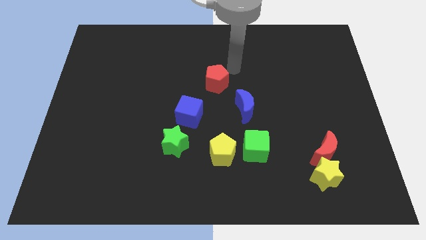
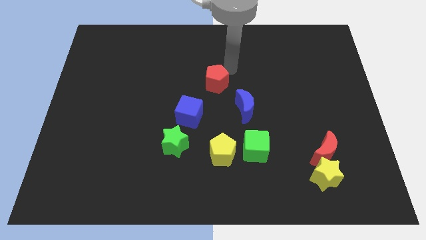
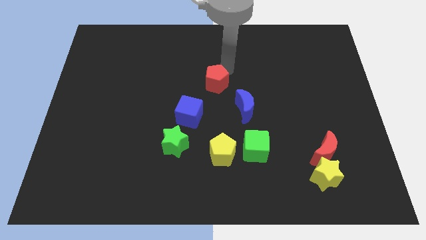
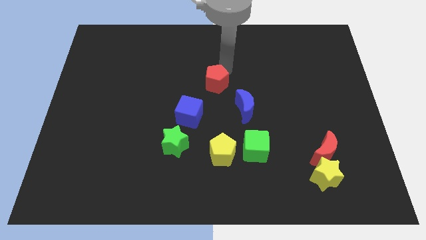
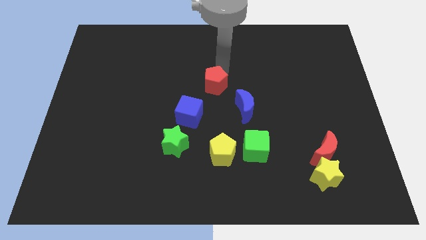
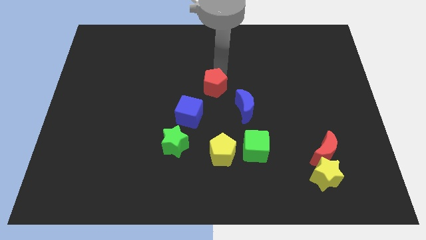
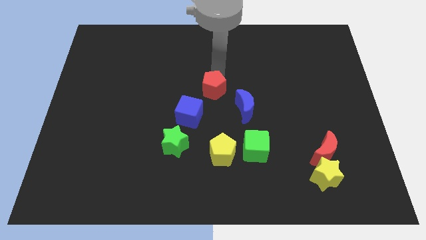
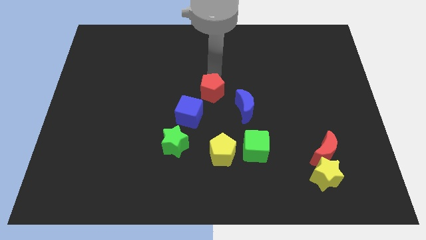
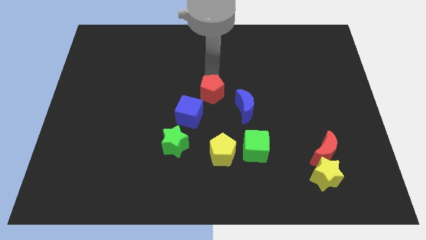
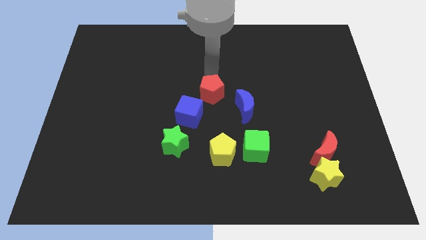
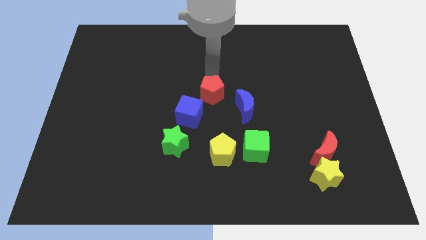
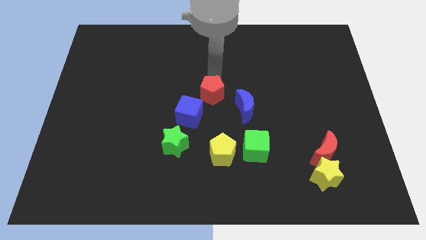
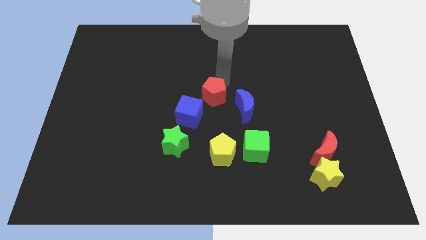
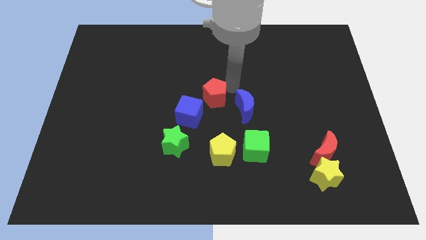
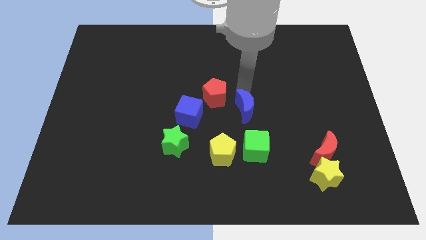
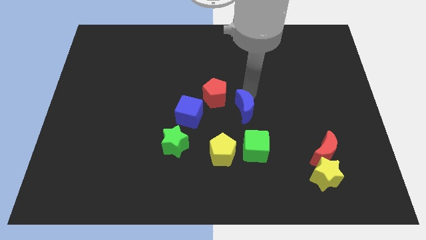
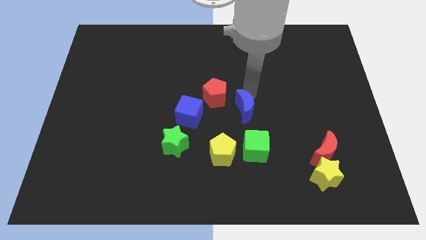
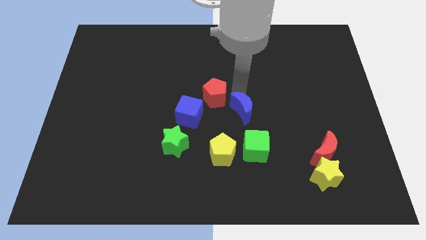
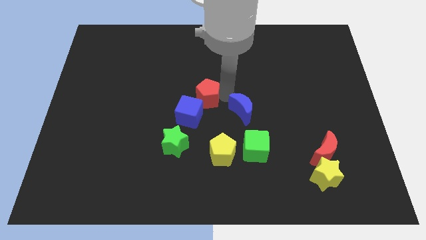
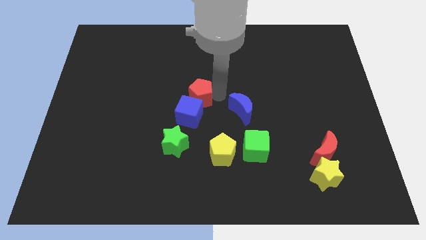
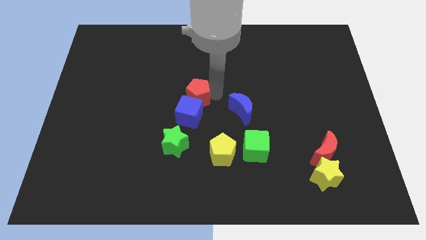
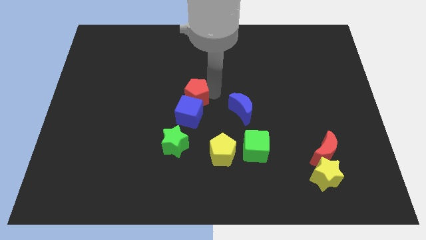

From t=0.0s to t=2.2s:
drag the red pentagon to the top of the blue cube

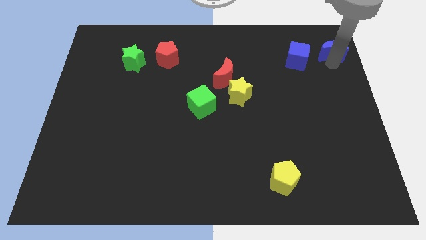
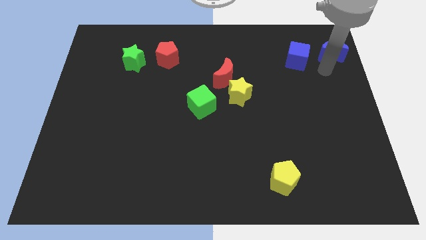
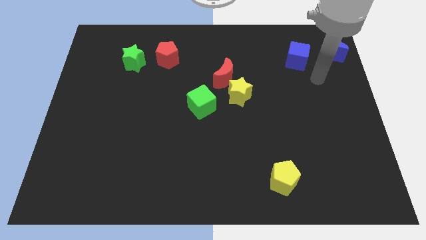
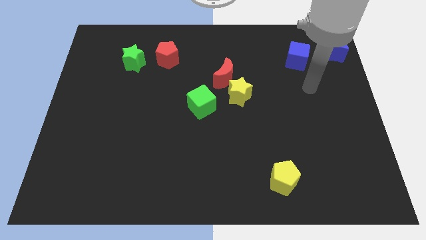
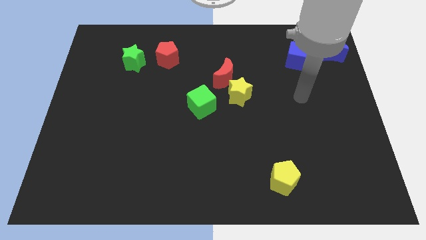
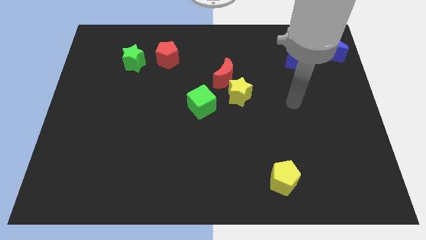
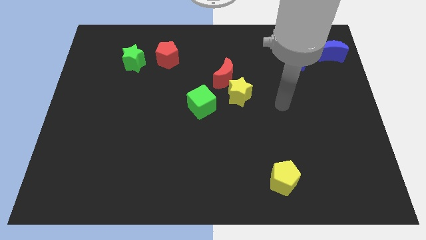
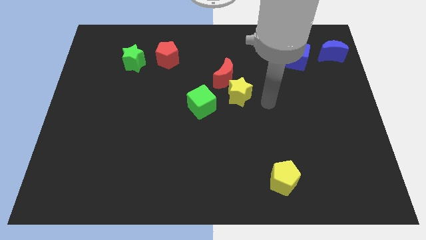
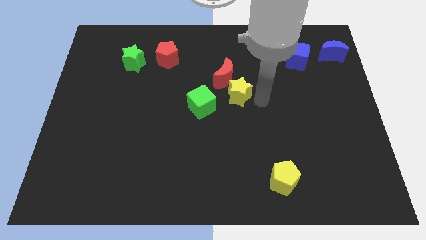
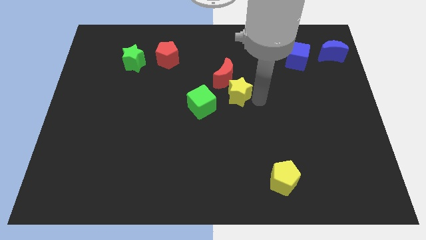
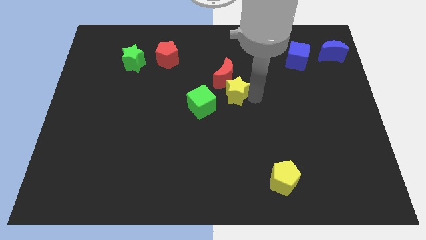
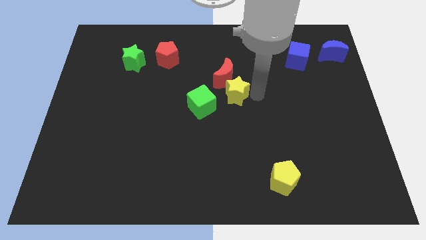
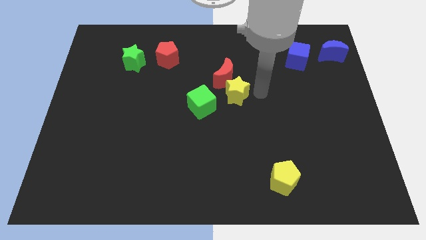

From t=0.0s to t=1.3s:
slightly push the yellow star to the bottom right side of the red crescent

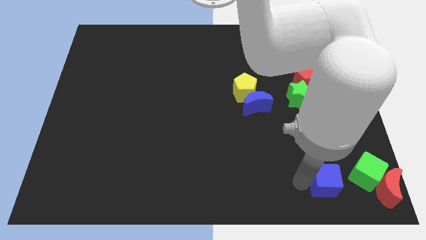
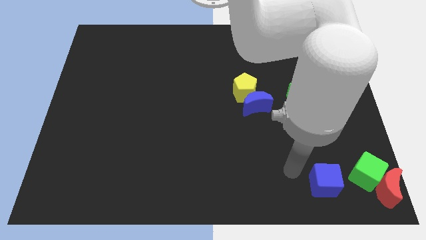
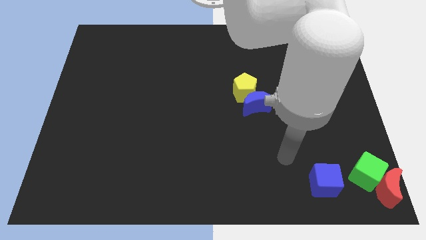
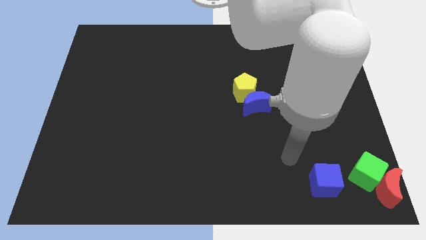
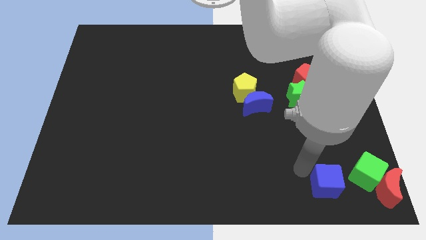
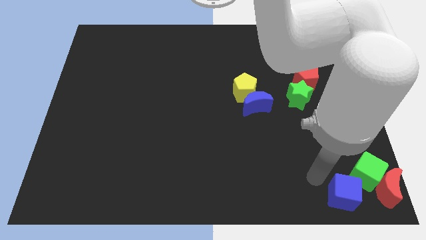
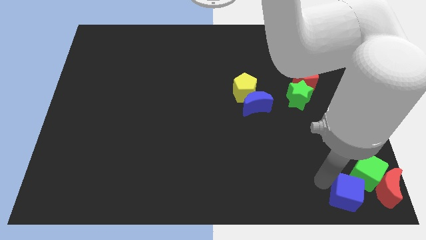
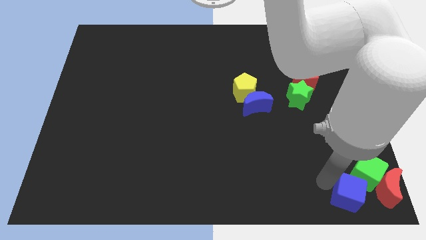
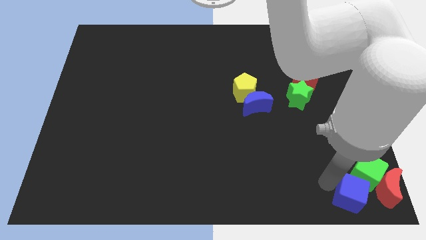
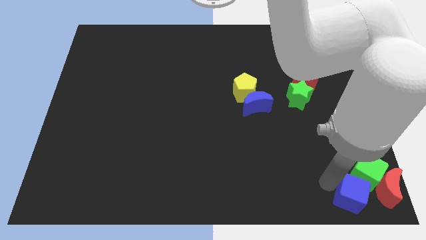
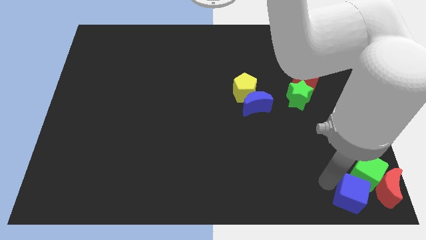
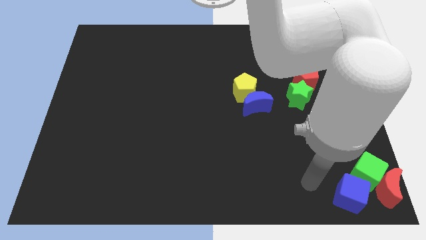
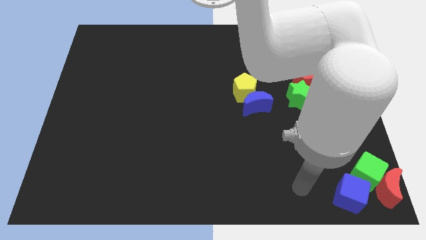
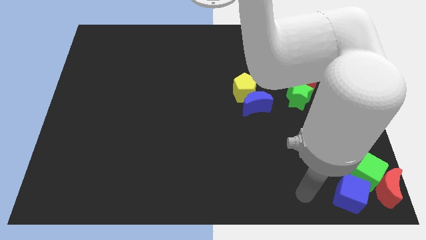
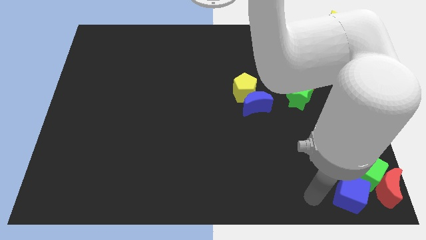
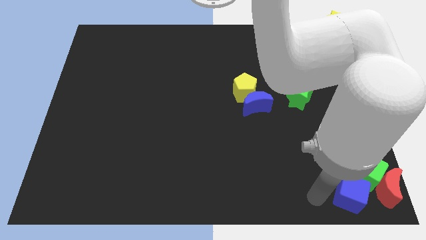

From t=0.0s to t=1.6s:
place the blue cube close to the green cube

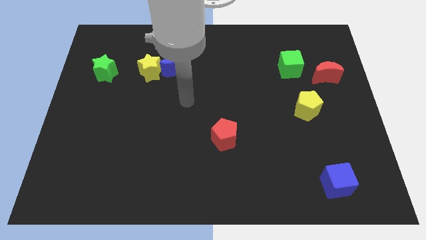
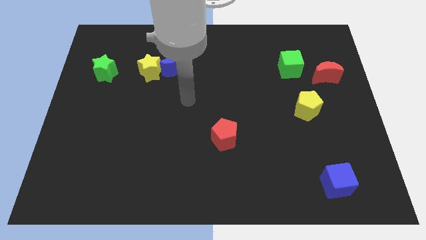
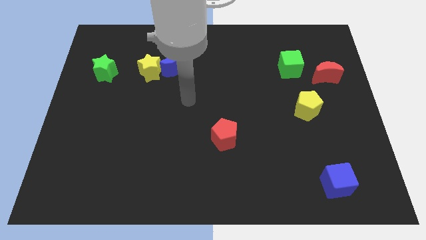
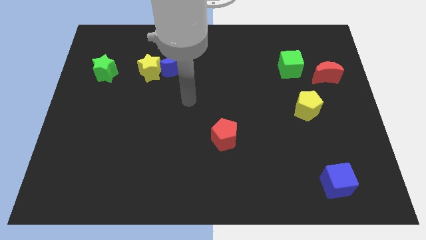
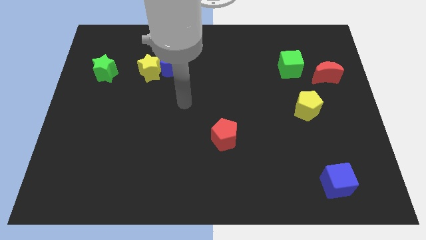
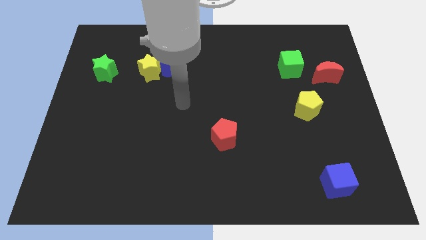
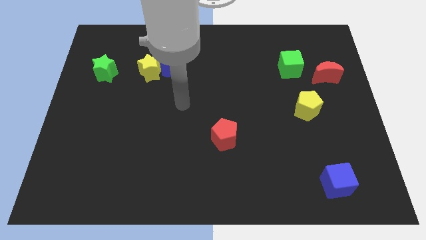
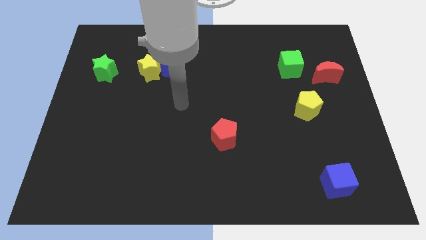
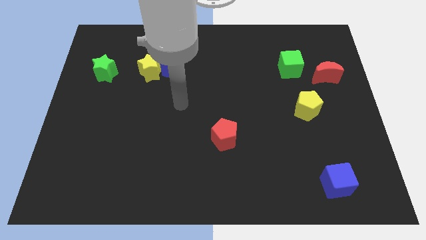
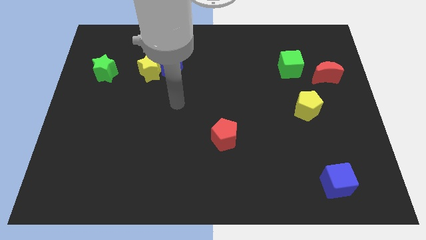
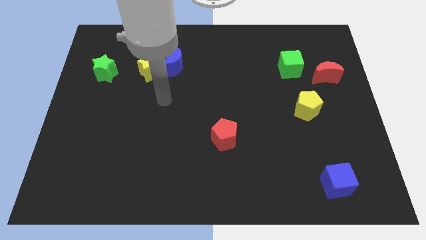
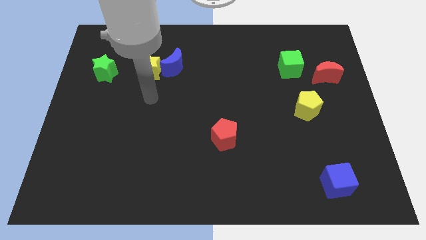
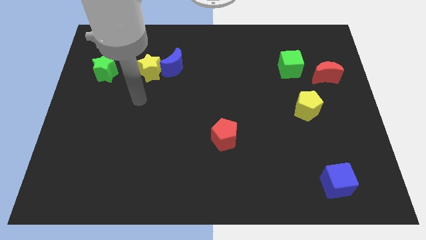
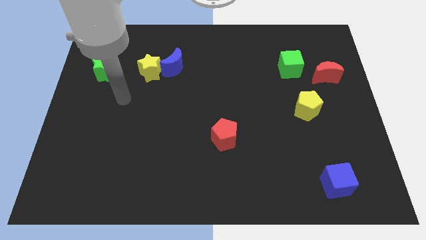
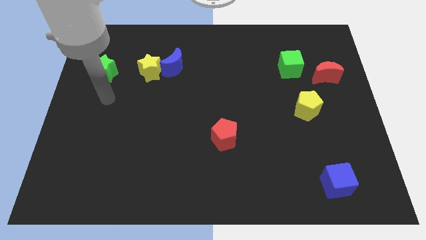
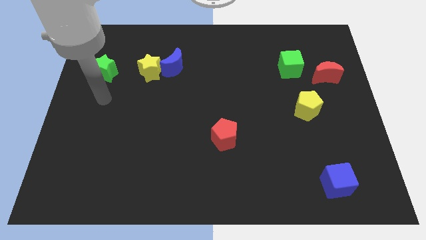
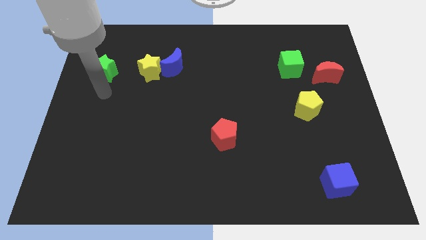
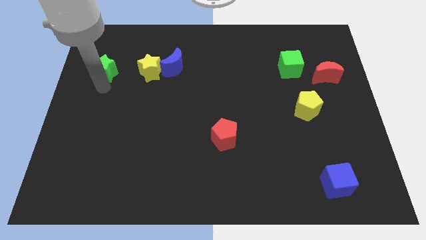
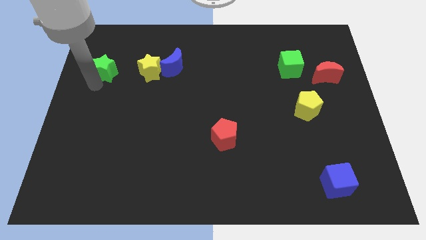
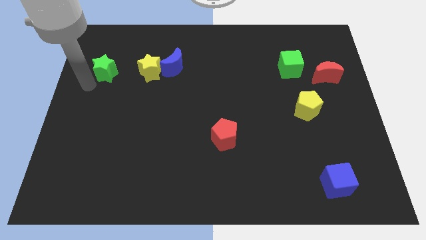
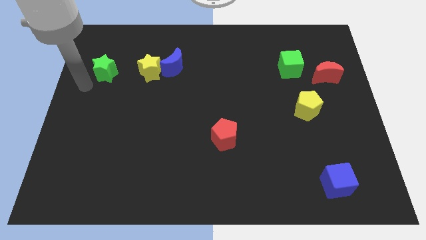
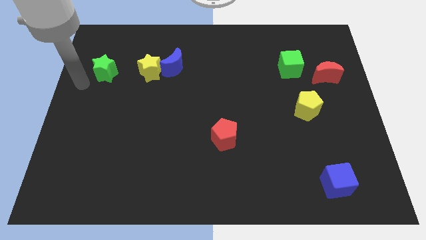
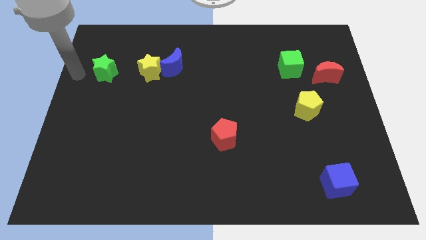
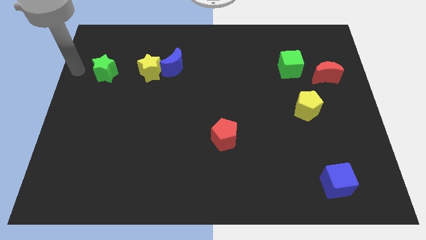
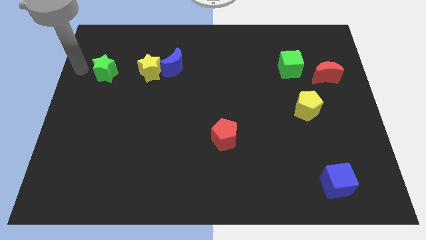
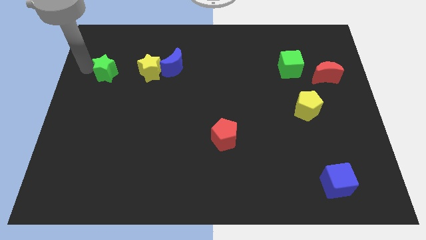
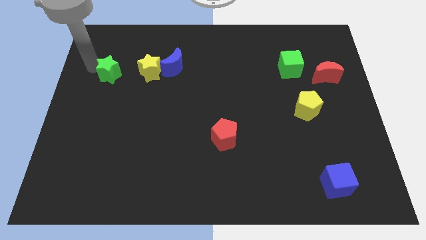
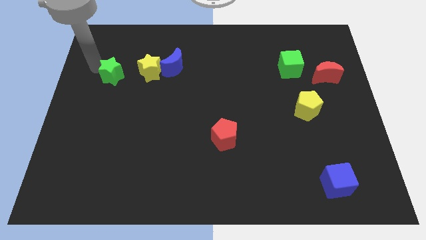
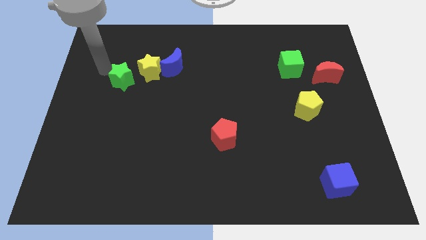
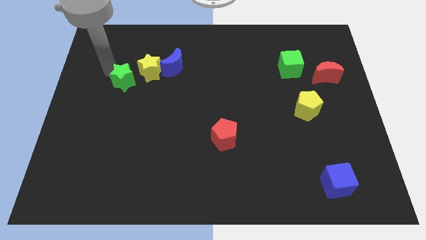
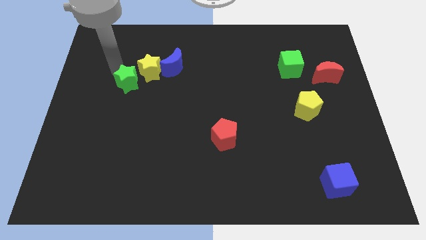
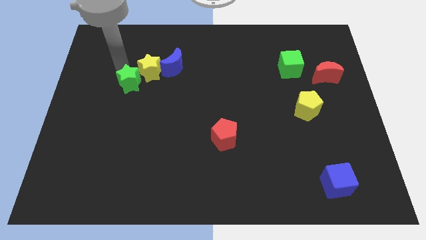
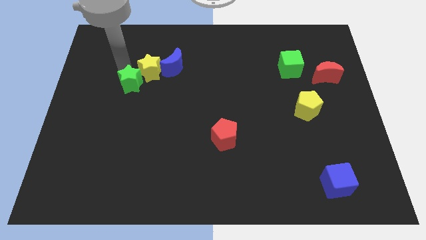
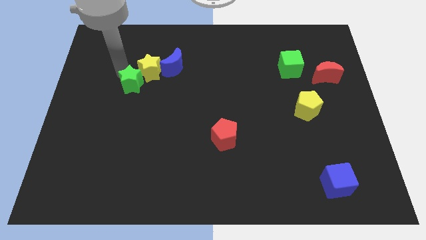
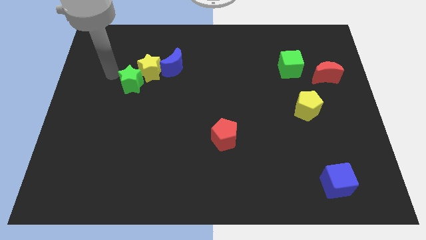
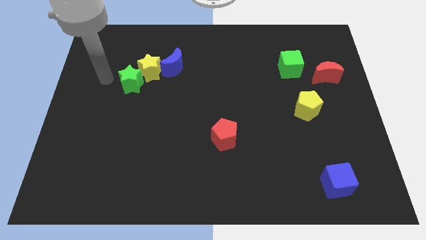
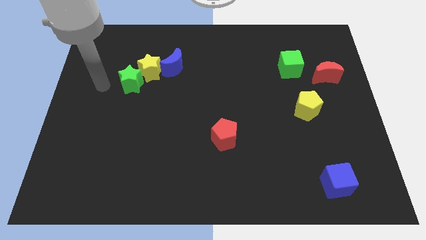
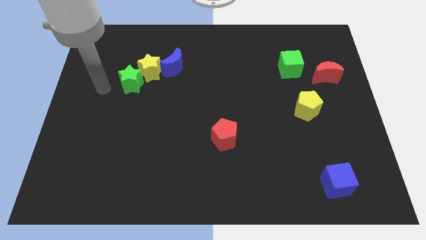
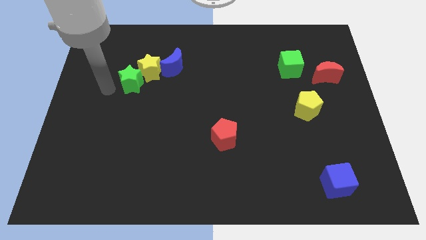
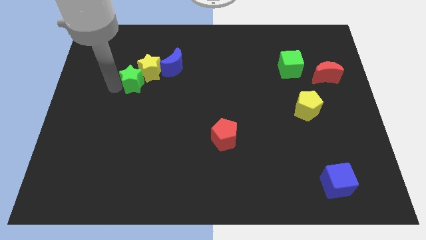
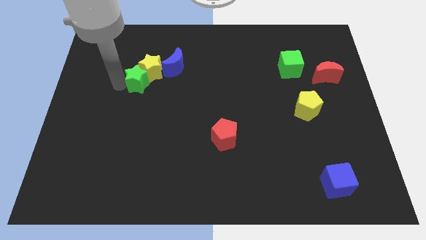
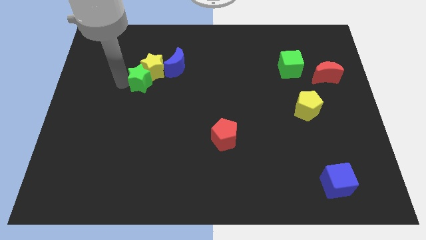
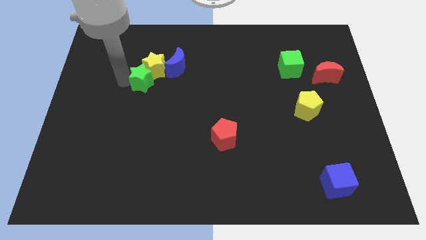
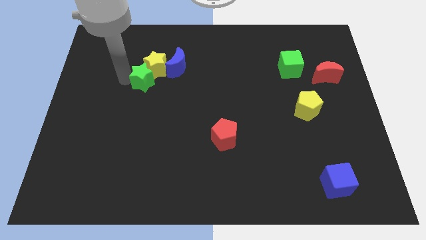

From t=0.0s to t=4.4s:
push the green star into the yellow star
